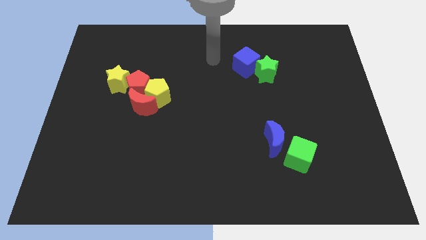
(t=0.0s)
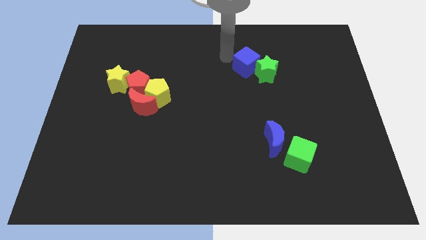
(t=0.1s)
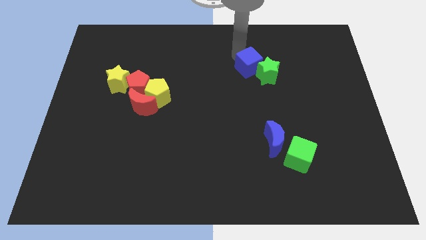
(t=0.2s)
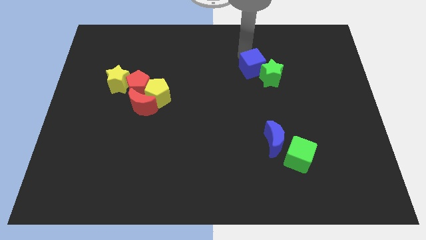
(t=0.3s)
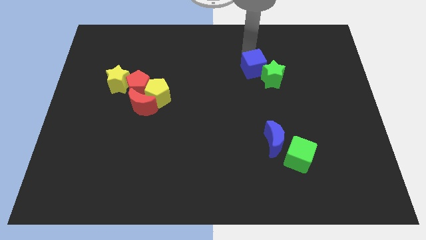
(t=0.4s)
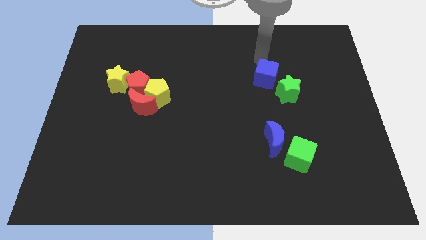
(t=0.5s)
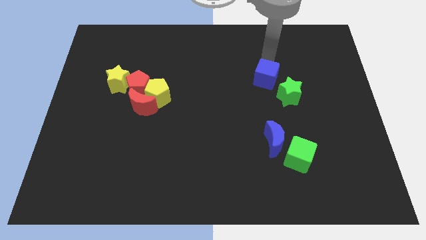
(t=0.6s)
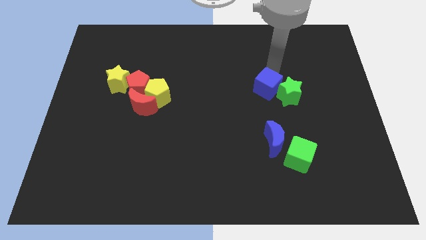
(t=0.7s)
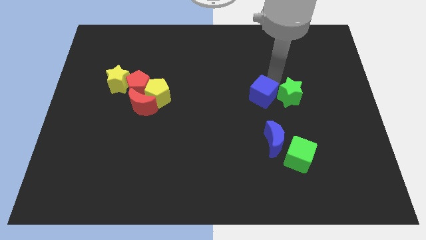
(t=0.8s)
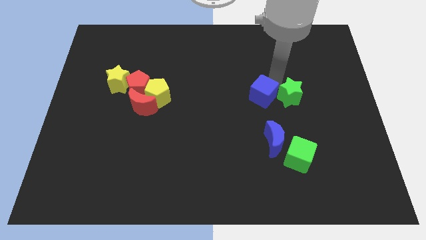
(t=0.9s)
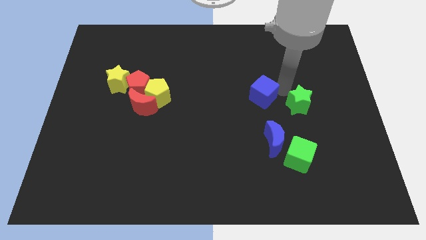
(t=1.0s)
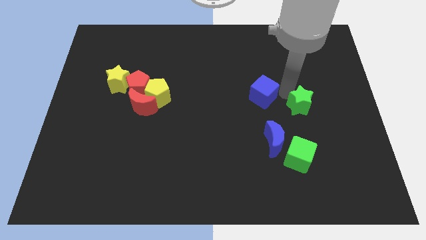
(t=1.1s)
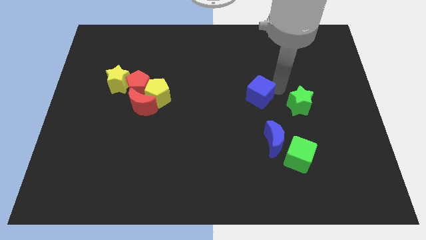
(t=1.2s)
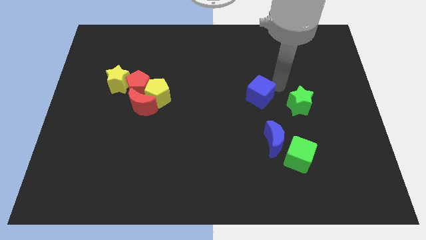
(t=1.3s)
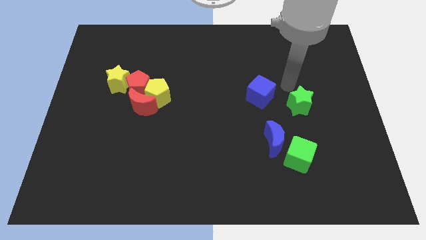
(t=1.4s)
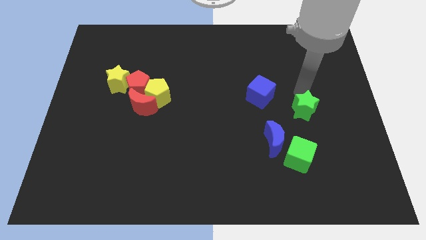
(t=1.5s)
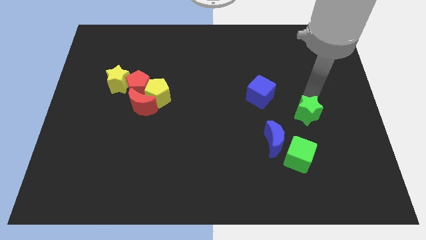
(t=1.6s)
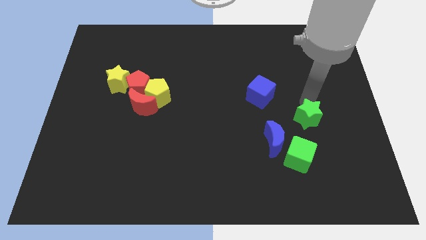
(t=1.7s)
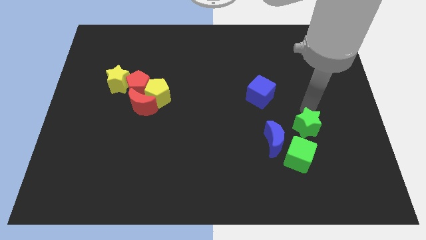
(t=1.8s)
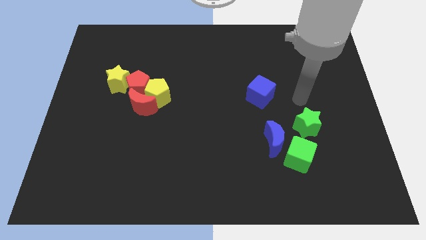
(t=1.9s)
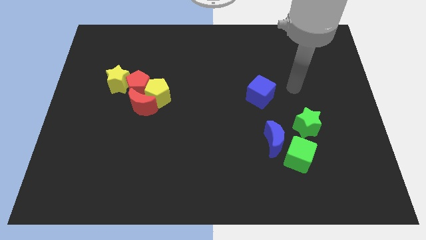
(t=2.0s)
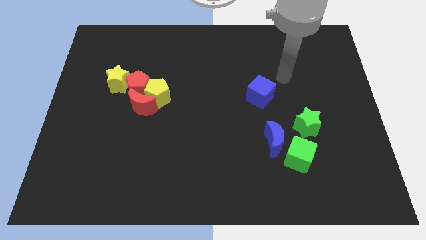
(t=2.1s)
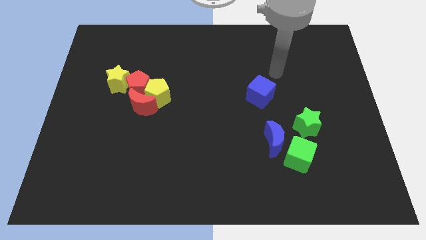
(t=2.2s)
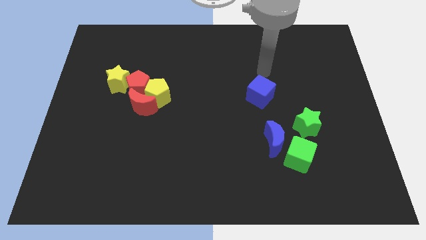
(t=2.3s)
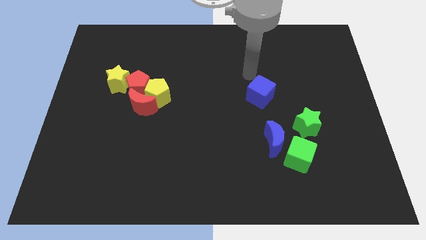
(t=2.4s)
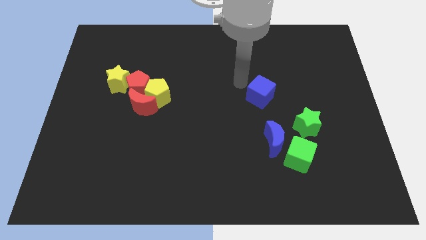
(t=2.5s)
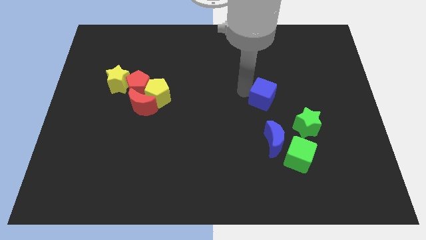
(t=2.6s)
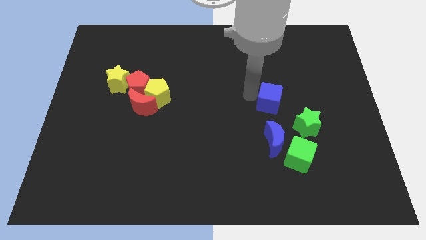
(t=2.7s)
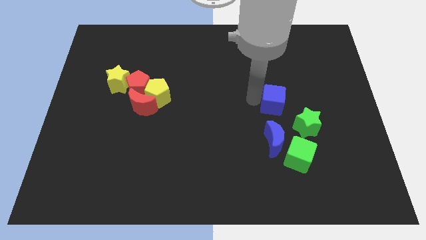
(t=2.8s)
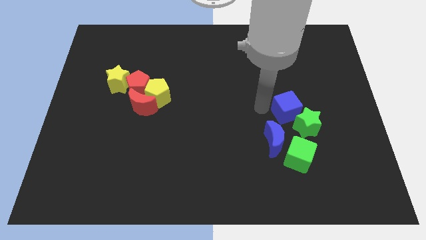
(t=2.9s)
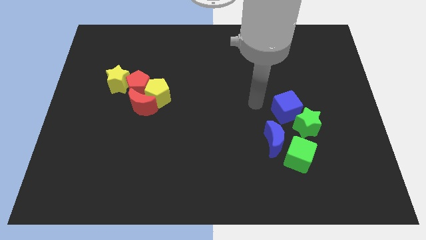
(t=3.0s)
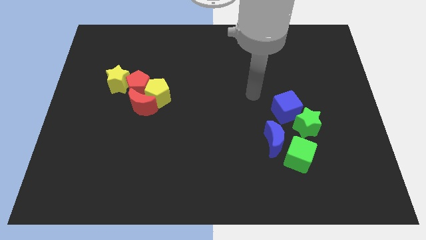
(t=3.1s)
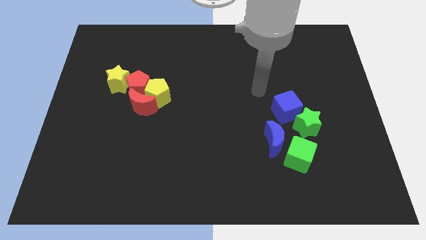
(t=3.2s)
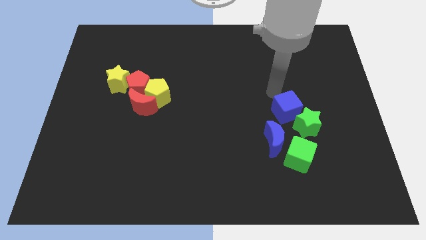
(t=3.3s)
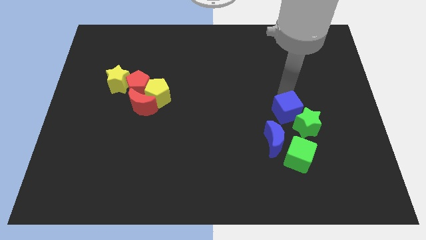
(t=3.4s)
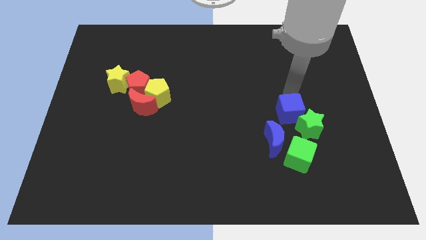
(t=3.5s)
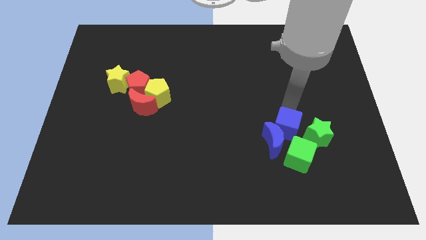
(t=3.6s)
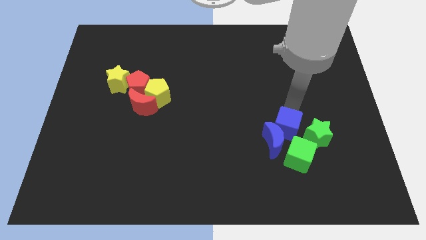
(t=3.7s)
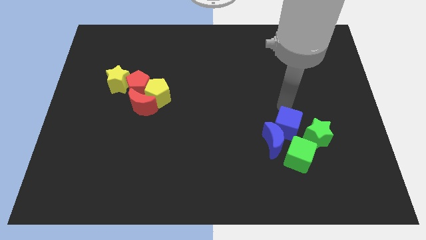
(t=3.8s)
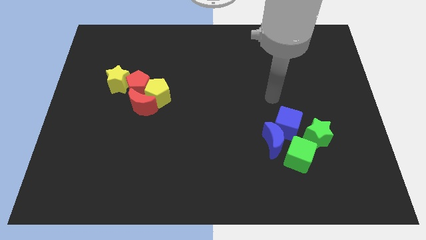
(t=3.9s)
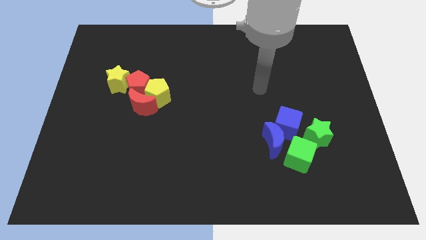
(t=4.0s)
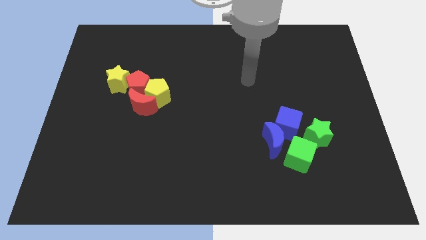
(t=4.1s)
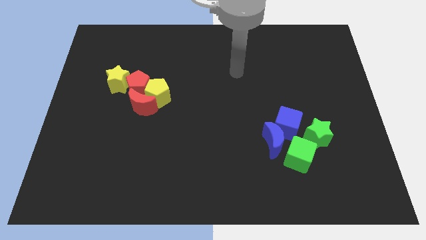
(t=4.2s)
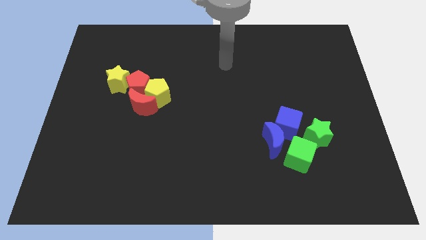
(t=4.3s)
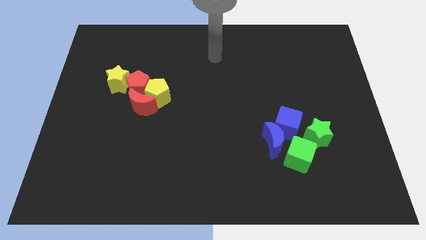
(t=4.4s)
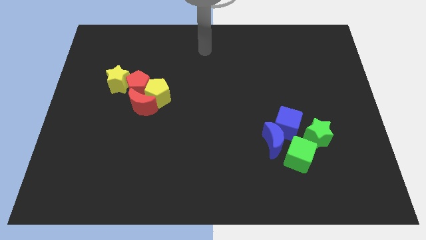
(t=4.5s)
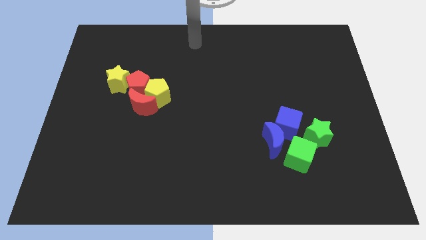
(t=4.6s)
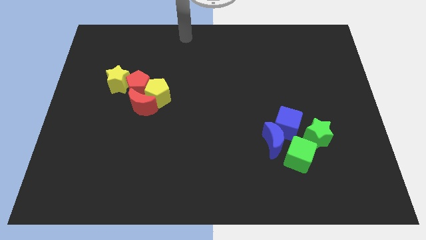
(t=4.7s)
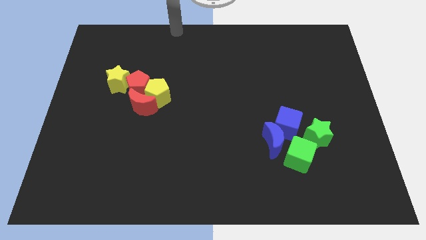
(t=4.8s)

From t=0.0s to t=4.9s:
push blue cube and green star towards blue moon and green cube

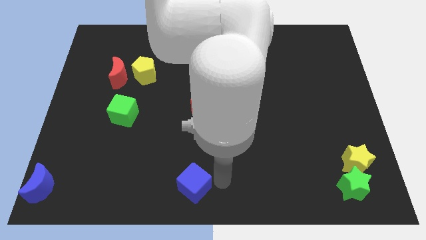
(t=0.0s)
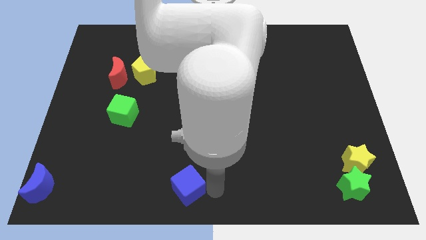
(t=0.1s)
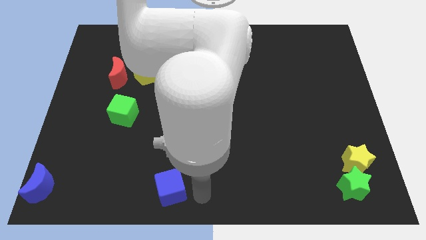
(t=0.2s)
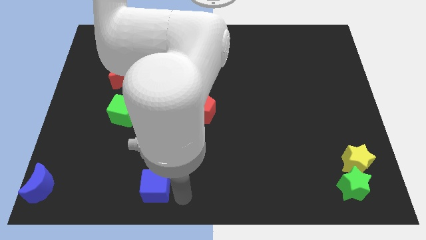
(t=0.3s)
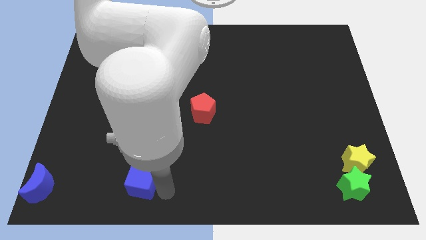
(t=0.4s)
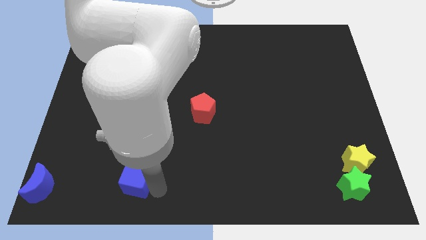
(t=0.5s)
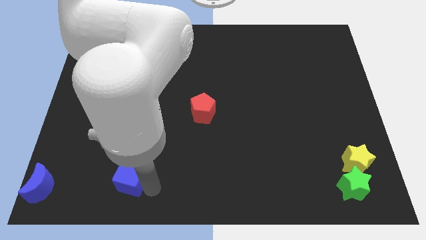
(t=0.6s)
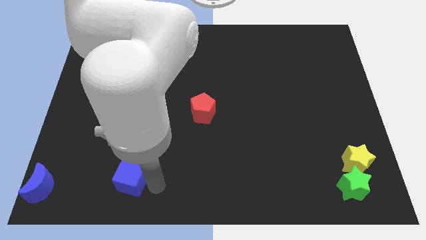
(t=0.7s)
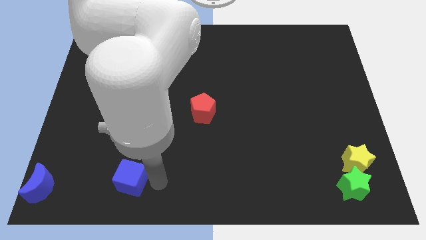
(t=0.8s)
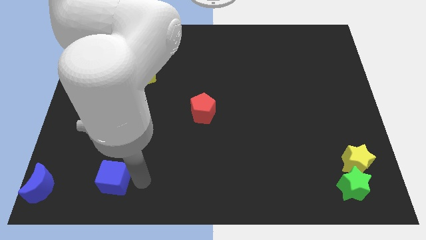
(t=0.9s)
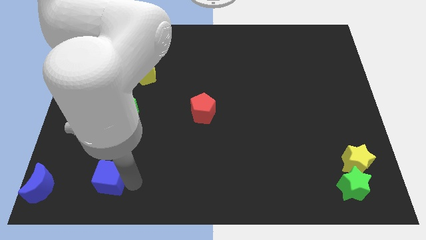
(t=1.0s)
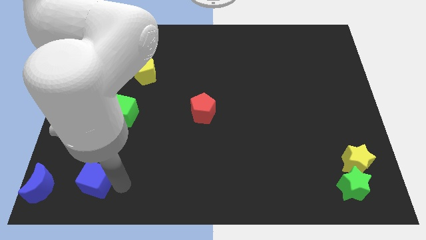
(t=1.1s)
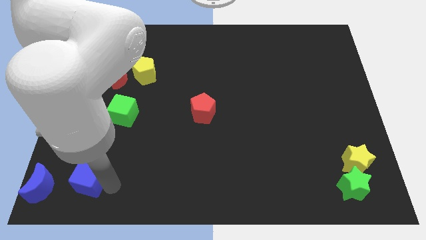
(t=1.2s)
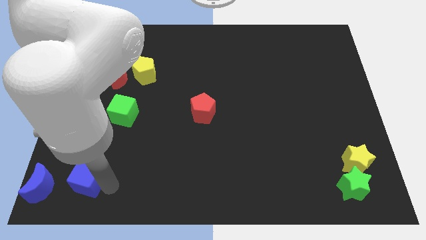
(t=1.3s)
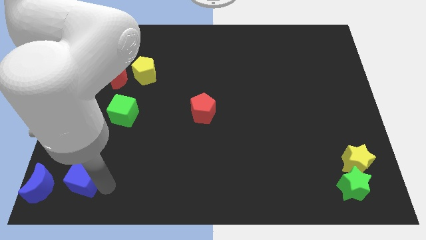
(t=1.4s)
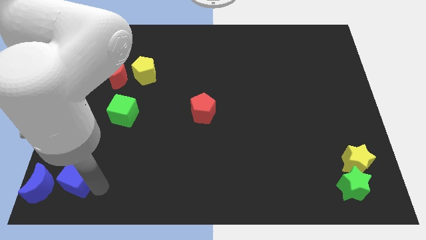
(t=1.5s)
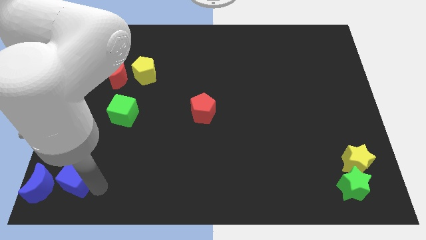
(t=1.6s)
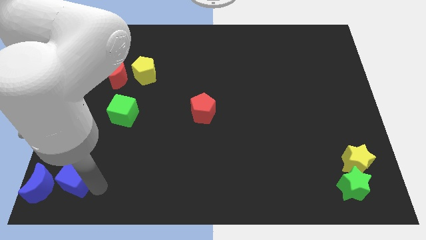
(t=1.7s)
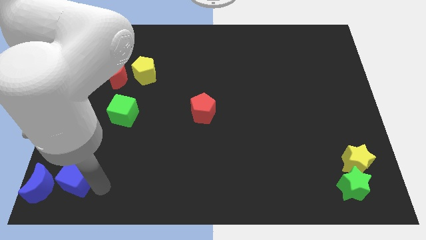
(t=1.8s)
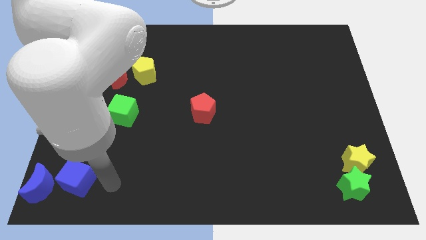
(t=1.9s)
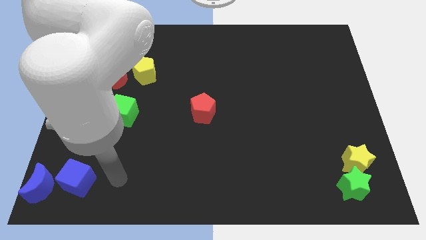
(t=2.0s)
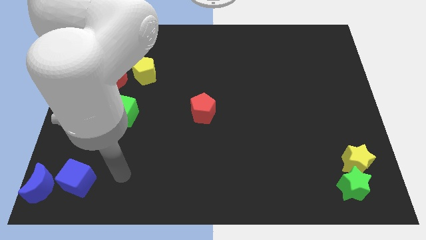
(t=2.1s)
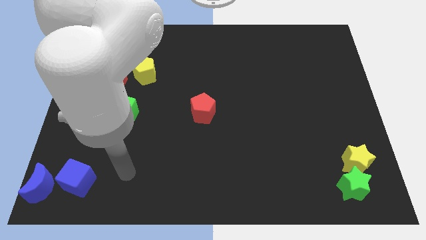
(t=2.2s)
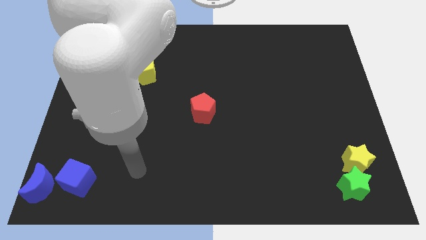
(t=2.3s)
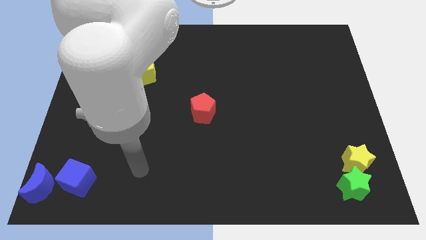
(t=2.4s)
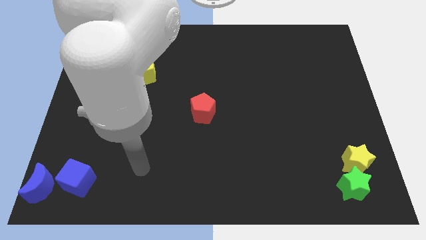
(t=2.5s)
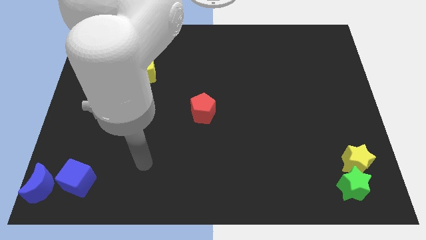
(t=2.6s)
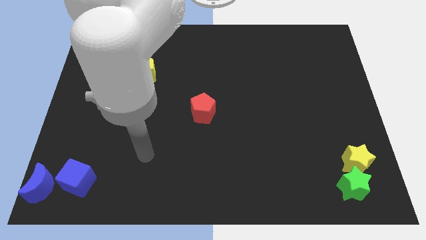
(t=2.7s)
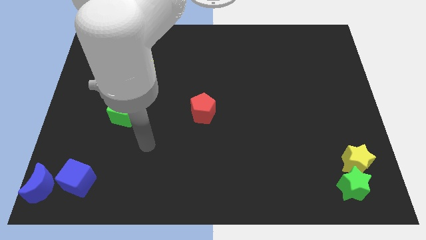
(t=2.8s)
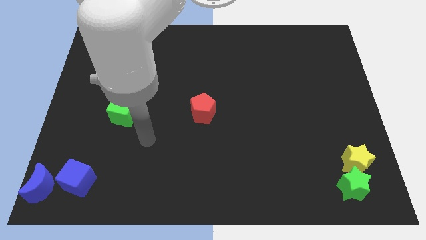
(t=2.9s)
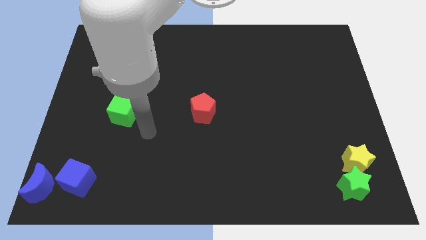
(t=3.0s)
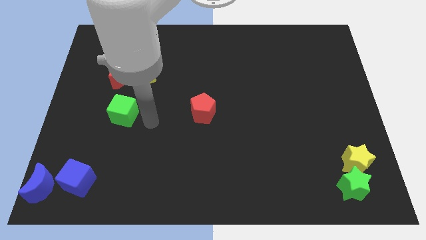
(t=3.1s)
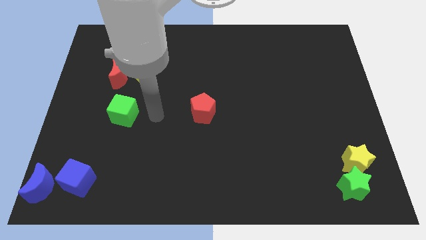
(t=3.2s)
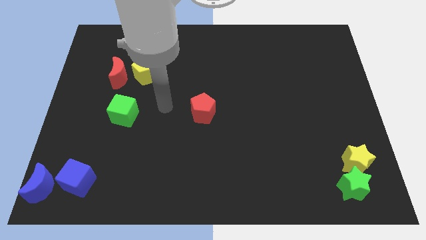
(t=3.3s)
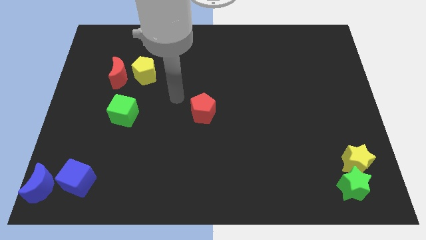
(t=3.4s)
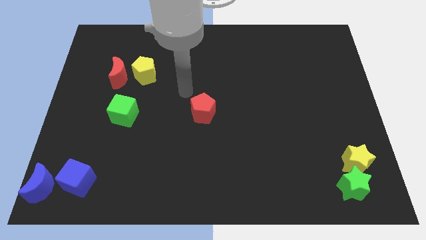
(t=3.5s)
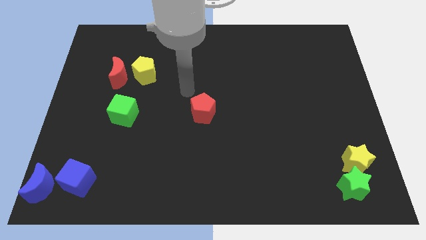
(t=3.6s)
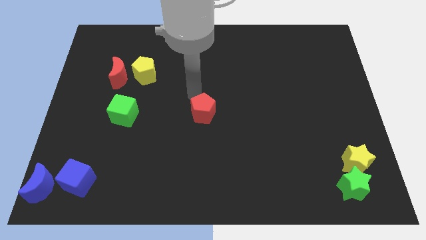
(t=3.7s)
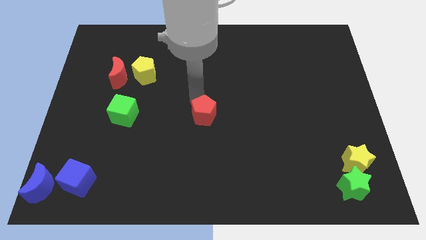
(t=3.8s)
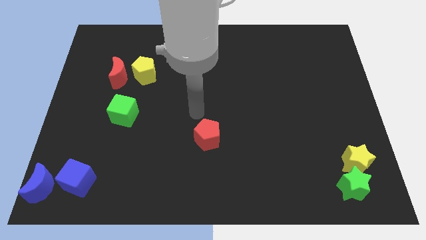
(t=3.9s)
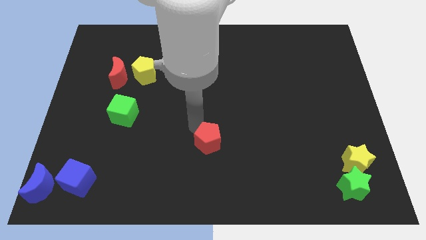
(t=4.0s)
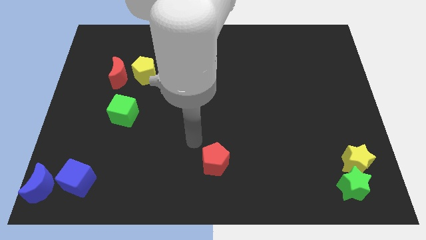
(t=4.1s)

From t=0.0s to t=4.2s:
place the blue cube to the right to the blue crescent towards left bottom of the board
